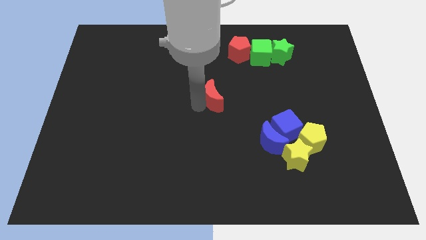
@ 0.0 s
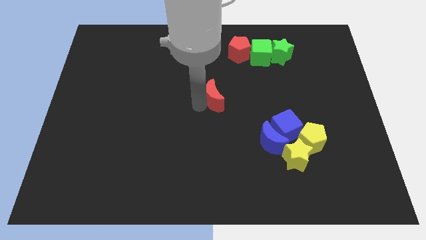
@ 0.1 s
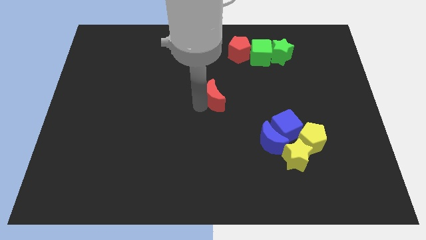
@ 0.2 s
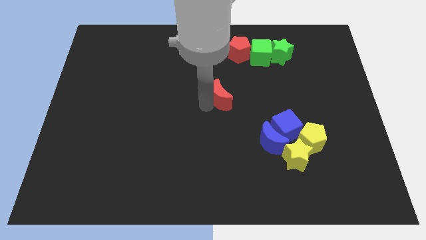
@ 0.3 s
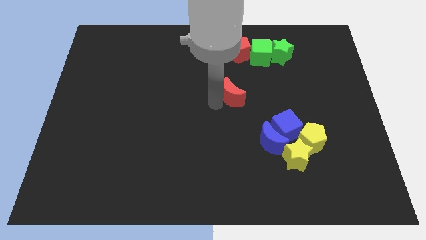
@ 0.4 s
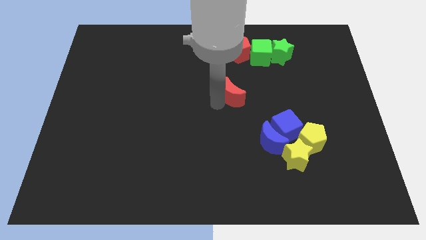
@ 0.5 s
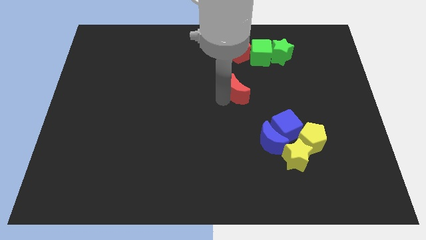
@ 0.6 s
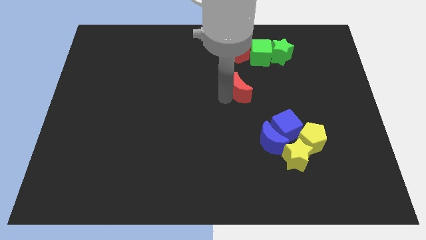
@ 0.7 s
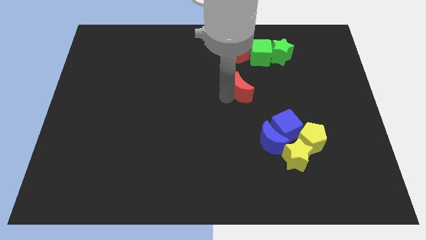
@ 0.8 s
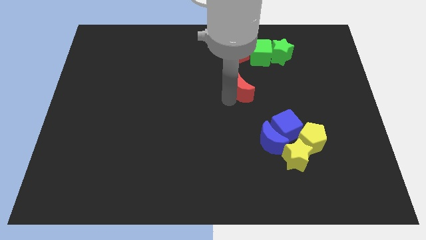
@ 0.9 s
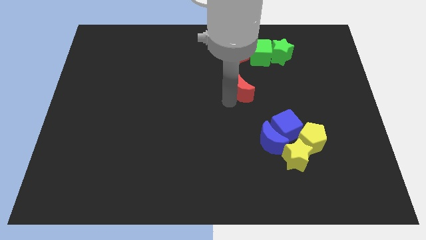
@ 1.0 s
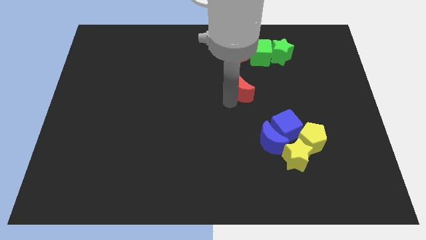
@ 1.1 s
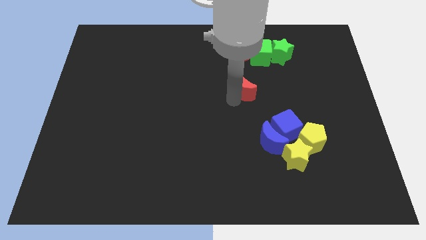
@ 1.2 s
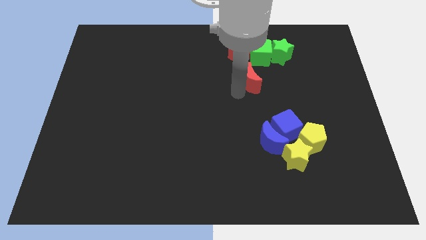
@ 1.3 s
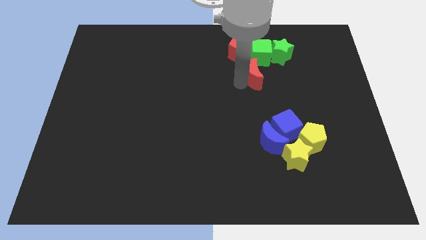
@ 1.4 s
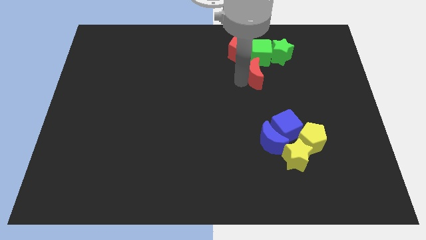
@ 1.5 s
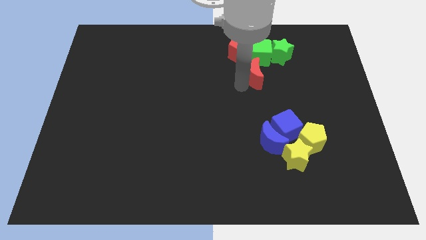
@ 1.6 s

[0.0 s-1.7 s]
move the red moon diagonally bottom right to the red pentagon

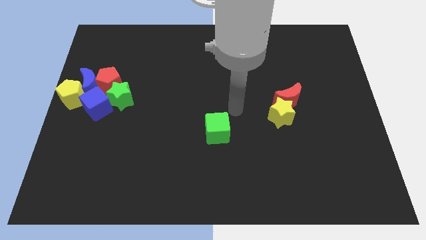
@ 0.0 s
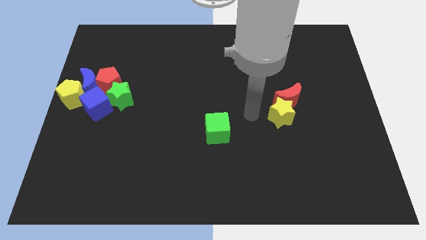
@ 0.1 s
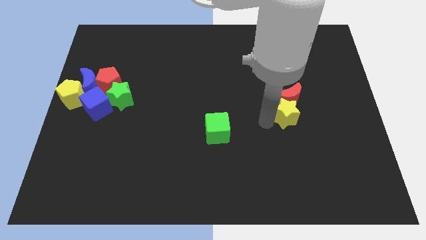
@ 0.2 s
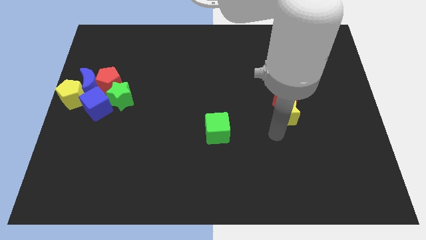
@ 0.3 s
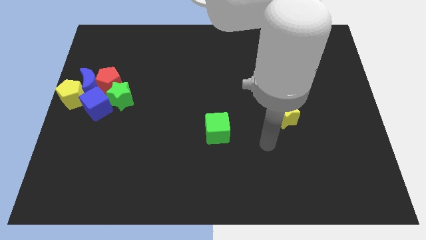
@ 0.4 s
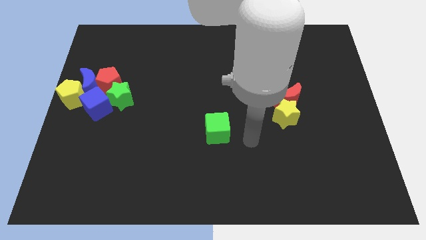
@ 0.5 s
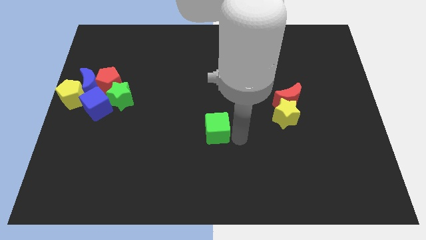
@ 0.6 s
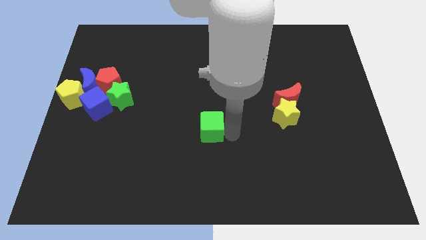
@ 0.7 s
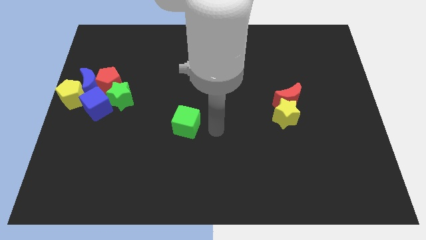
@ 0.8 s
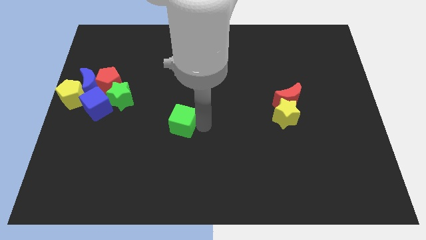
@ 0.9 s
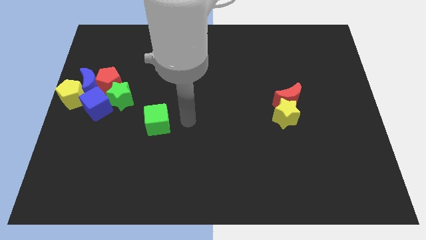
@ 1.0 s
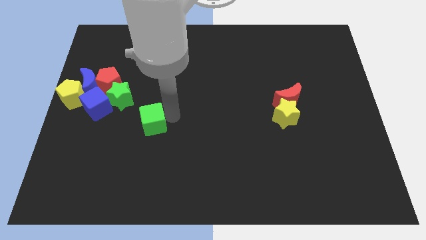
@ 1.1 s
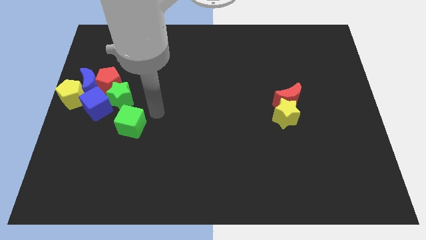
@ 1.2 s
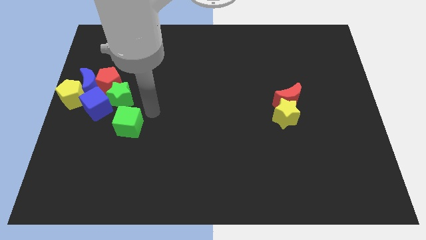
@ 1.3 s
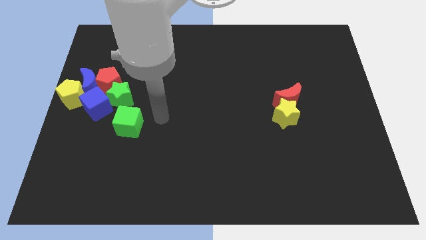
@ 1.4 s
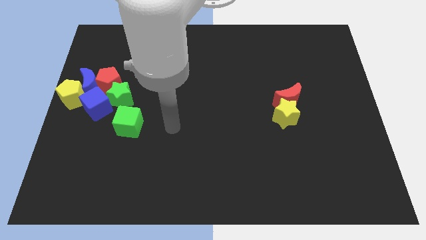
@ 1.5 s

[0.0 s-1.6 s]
move the green cube to the bottom of the green star

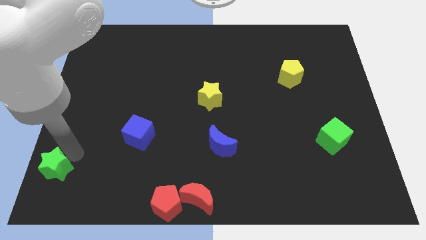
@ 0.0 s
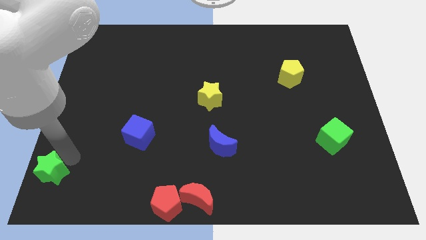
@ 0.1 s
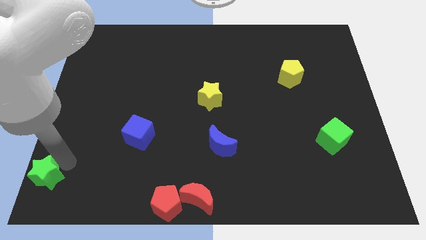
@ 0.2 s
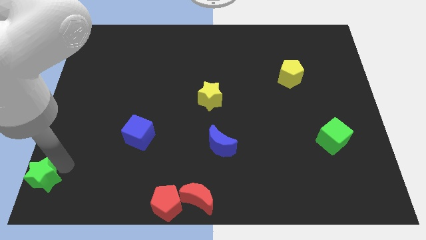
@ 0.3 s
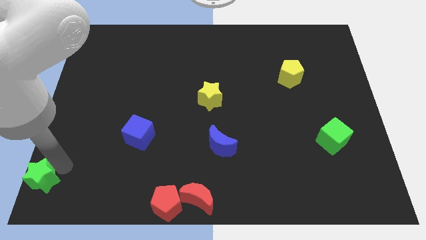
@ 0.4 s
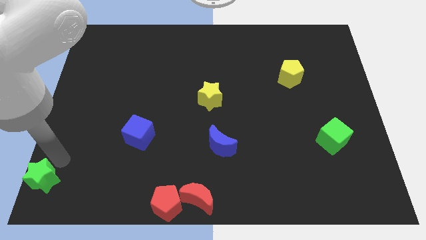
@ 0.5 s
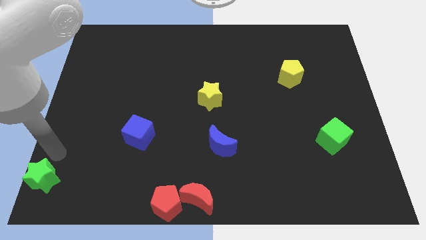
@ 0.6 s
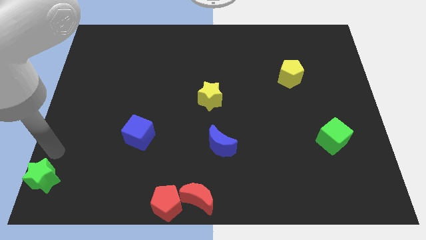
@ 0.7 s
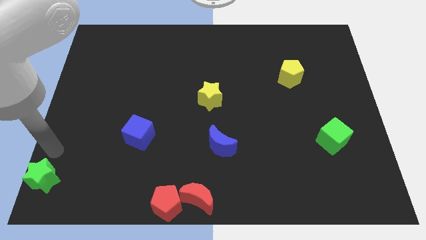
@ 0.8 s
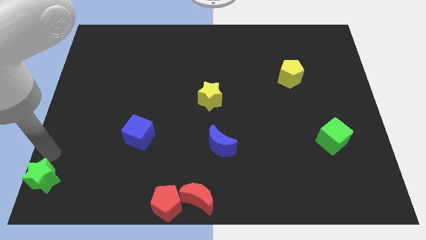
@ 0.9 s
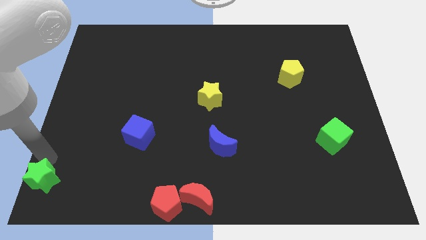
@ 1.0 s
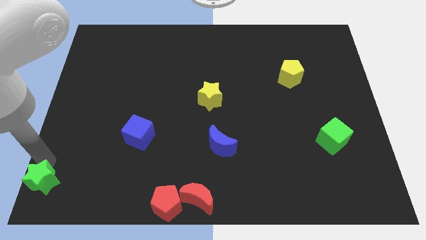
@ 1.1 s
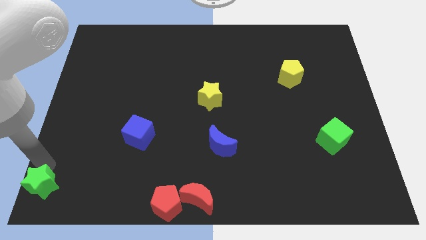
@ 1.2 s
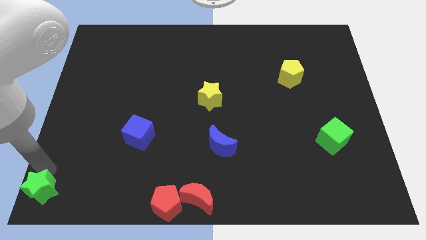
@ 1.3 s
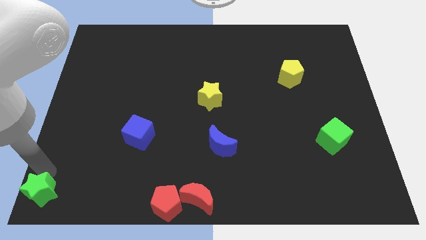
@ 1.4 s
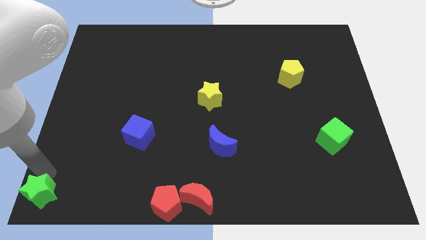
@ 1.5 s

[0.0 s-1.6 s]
slide the green star to the left bottom corner of the board

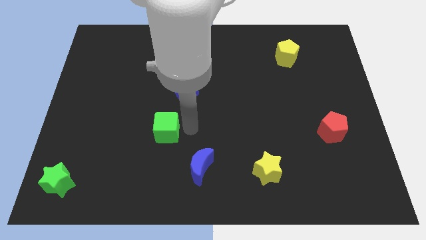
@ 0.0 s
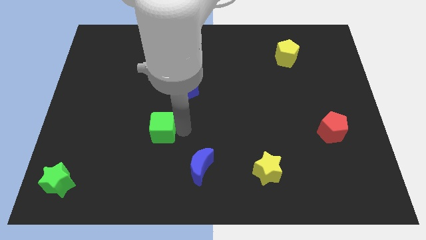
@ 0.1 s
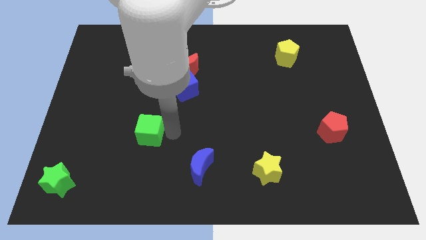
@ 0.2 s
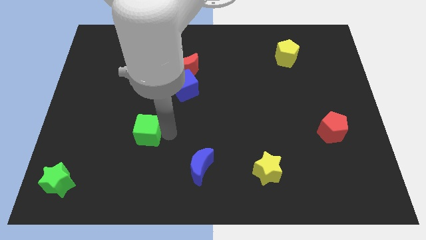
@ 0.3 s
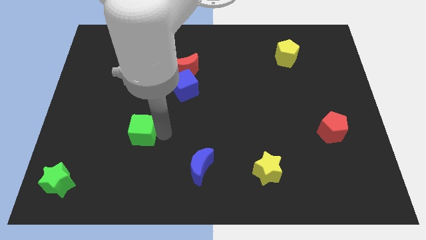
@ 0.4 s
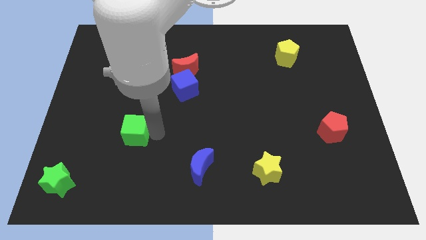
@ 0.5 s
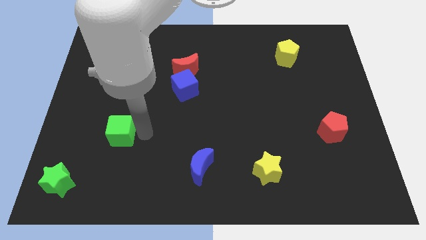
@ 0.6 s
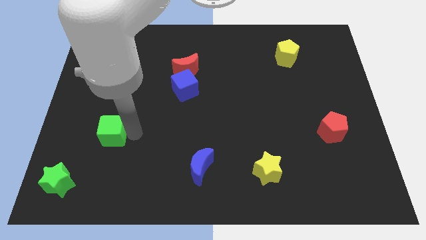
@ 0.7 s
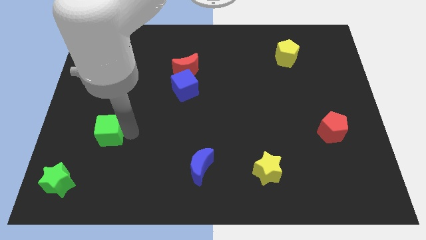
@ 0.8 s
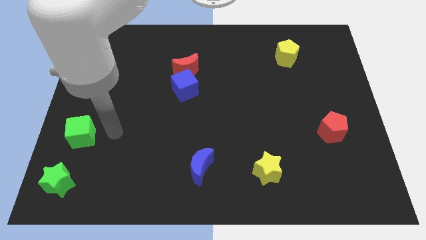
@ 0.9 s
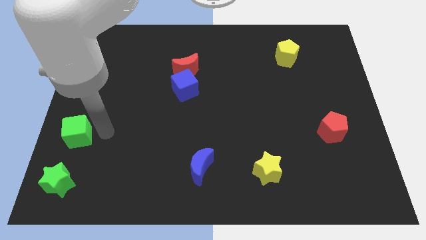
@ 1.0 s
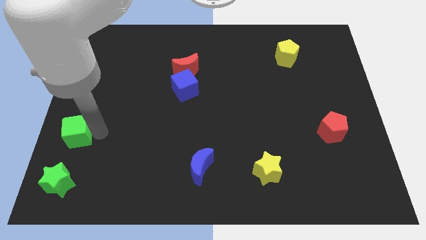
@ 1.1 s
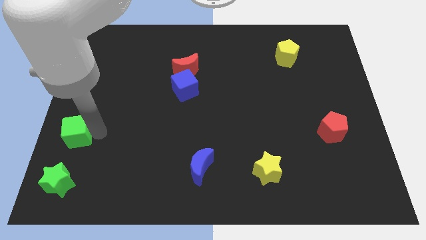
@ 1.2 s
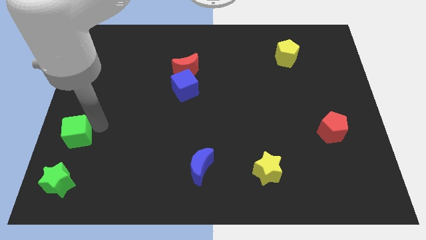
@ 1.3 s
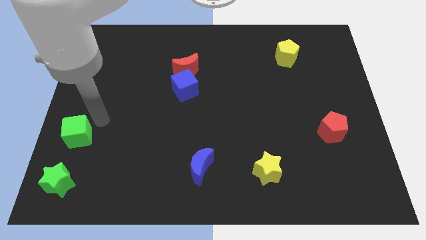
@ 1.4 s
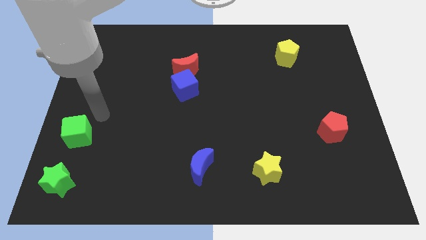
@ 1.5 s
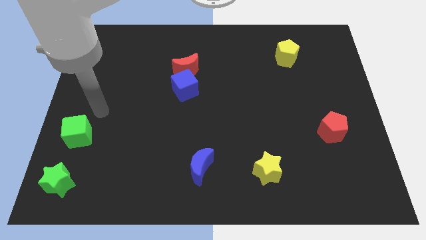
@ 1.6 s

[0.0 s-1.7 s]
slide the green cube above the green star

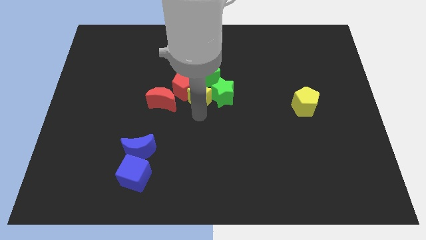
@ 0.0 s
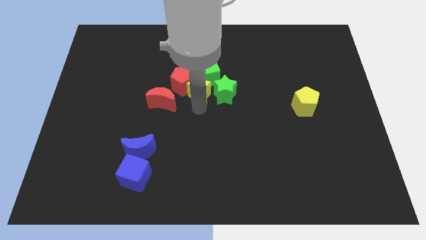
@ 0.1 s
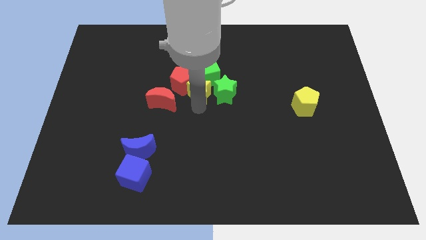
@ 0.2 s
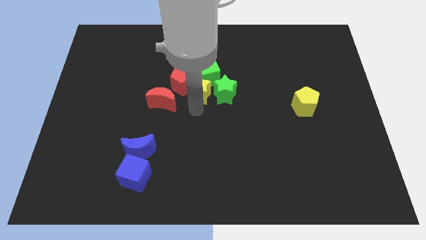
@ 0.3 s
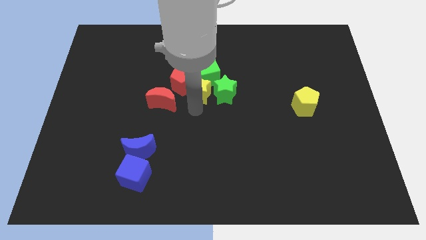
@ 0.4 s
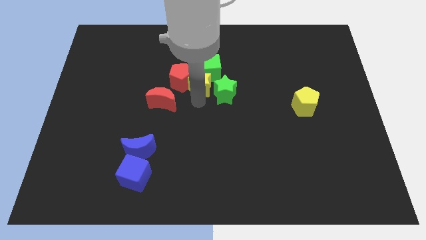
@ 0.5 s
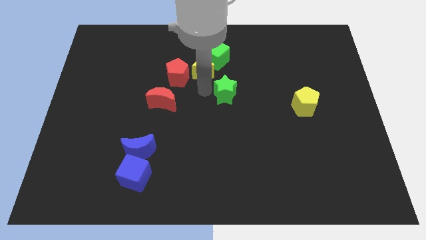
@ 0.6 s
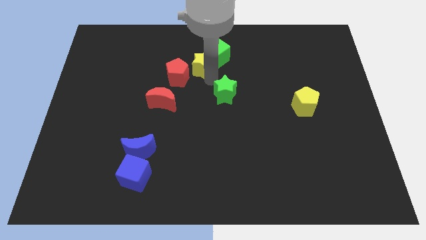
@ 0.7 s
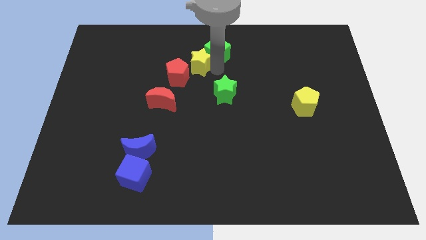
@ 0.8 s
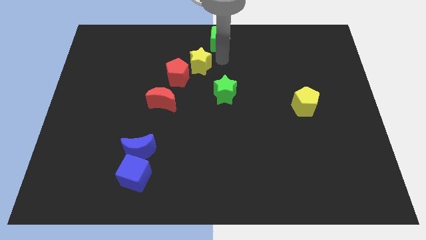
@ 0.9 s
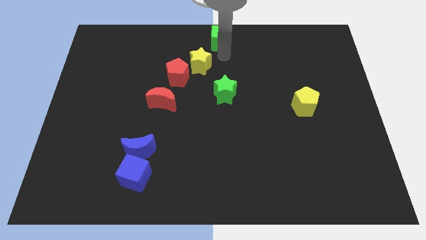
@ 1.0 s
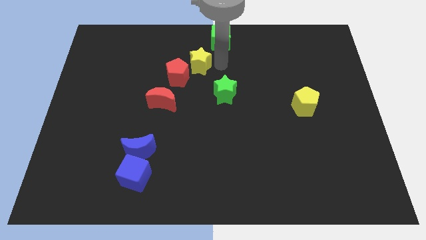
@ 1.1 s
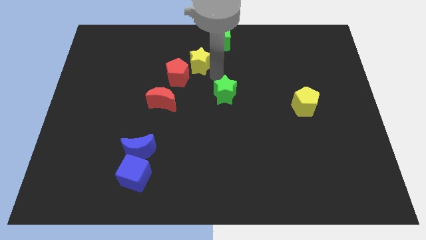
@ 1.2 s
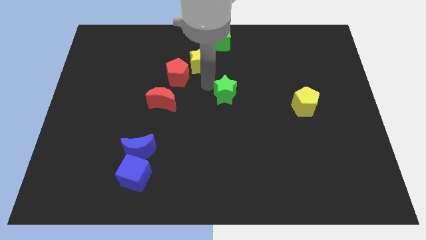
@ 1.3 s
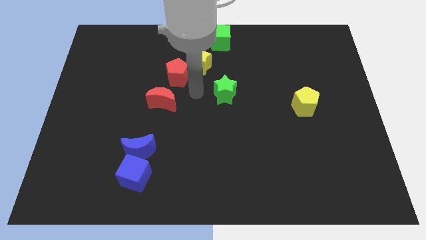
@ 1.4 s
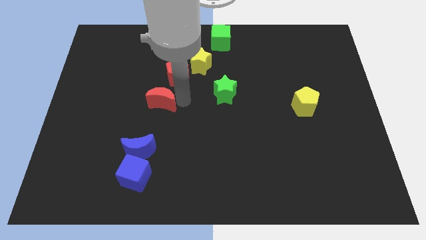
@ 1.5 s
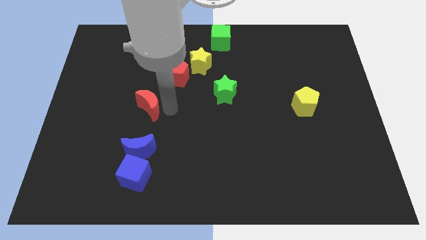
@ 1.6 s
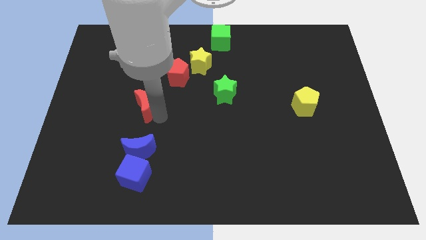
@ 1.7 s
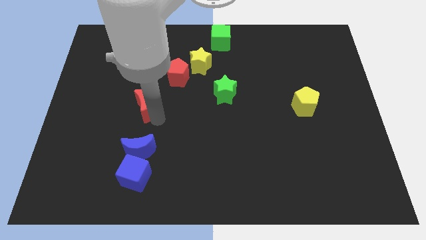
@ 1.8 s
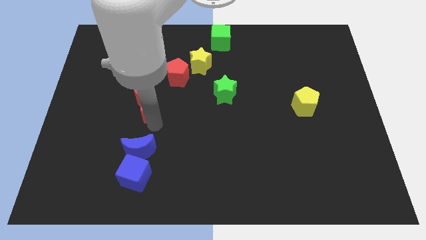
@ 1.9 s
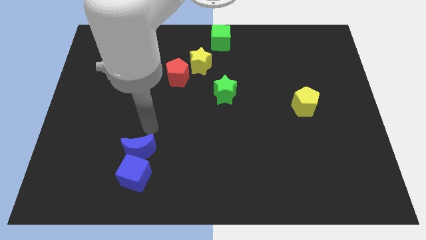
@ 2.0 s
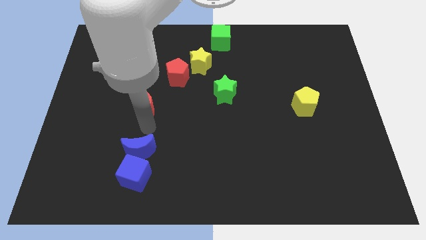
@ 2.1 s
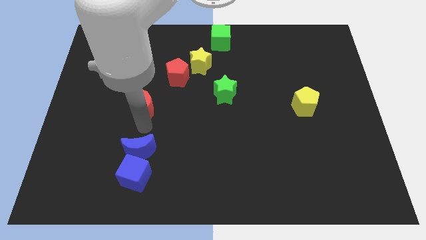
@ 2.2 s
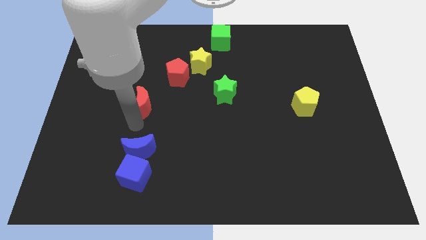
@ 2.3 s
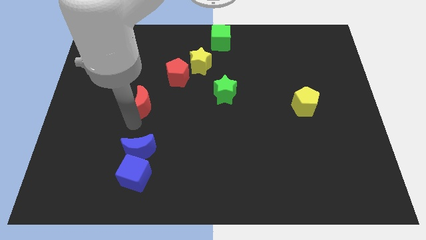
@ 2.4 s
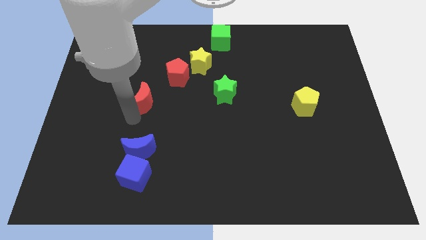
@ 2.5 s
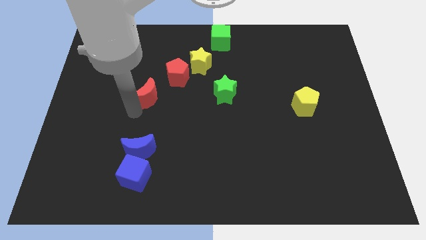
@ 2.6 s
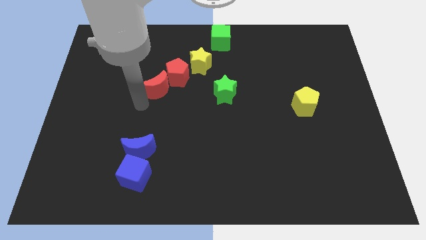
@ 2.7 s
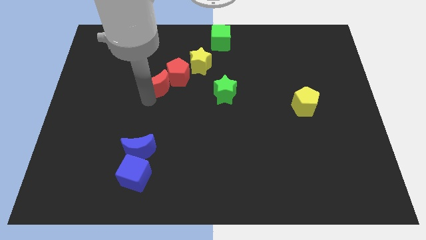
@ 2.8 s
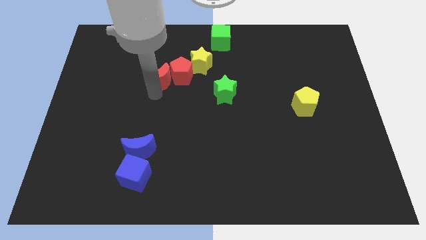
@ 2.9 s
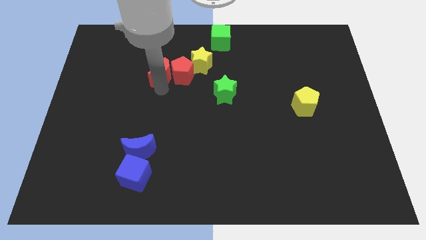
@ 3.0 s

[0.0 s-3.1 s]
place the red moon left to the red pentagon
